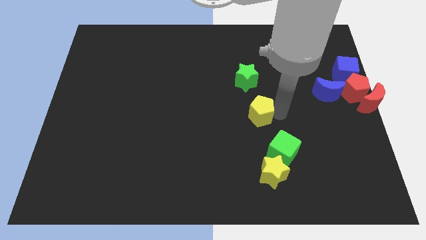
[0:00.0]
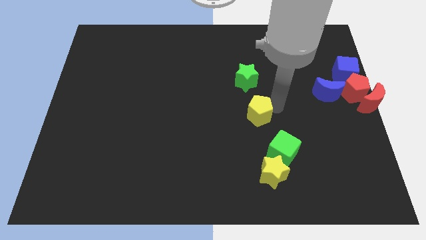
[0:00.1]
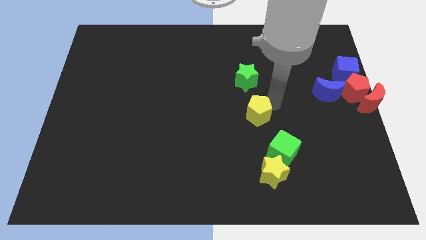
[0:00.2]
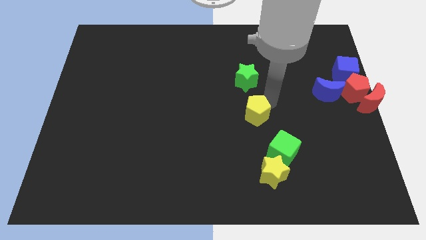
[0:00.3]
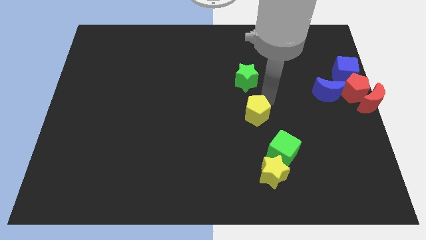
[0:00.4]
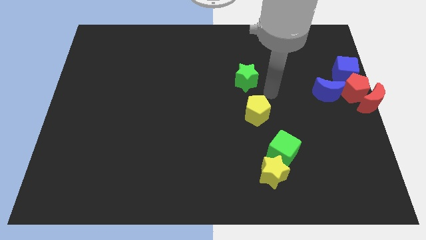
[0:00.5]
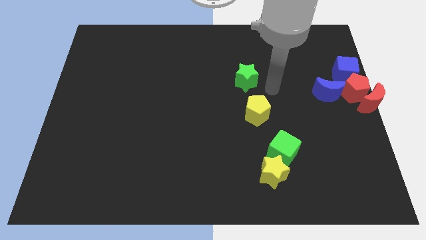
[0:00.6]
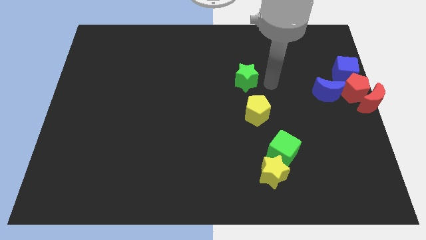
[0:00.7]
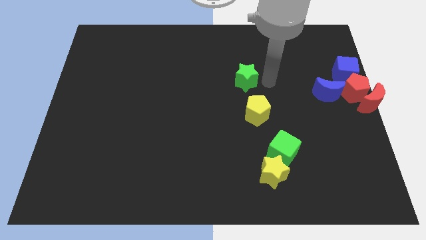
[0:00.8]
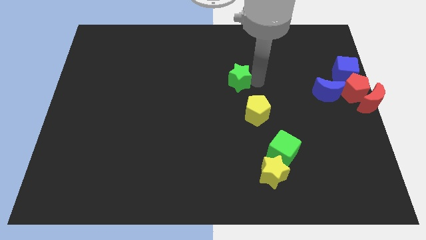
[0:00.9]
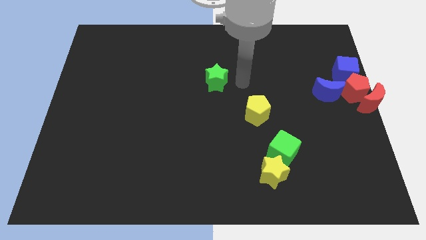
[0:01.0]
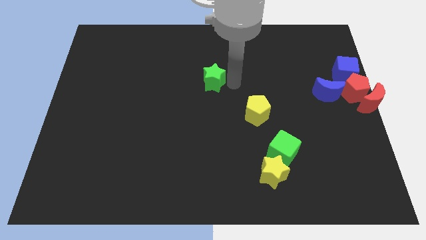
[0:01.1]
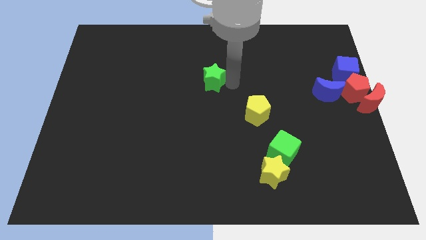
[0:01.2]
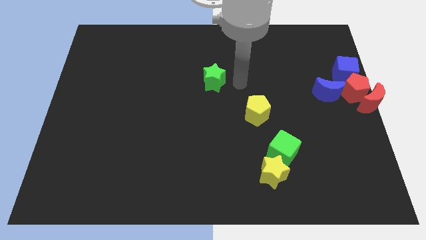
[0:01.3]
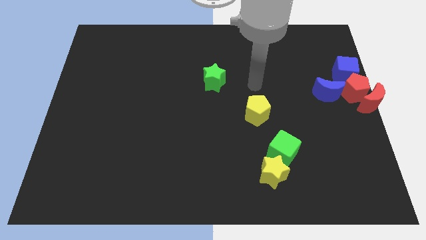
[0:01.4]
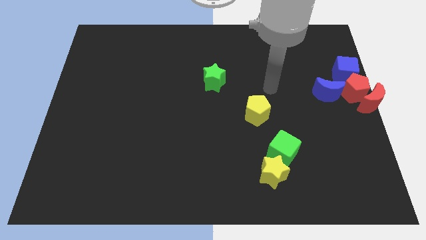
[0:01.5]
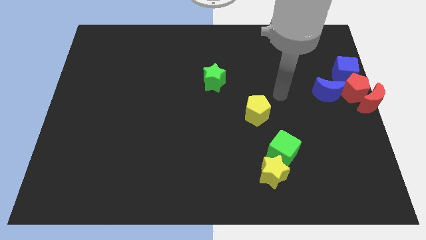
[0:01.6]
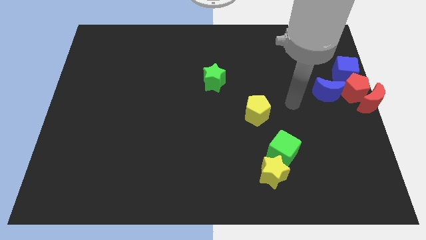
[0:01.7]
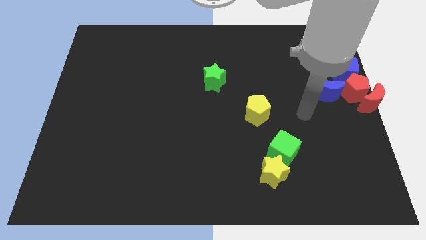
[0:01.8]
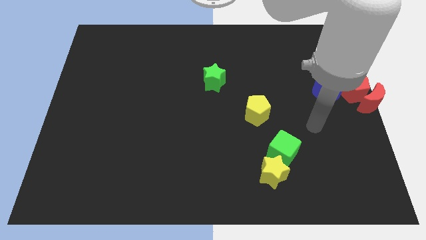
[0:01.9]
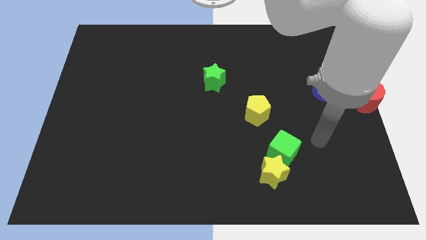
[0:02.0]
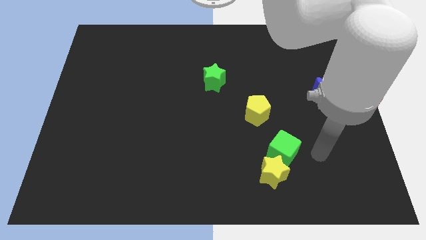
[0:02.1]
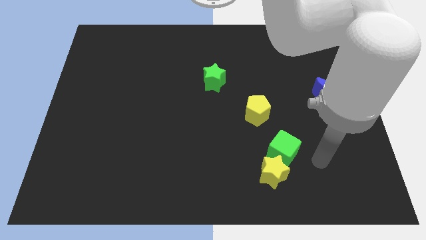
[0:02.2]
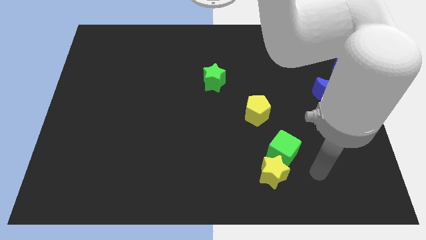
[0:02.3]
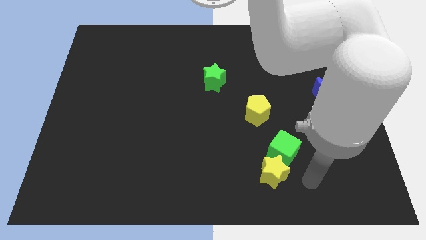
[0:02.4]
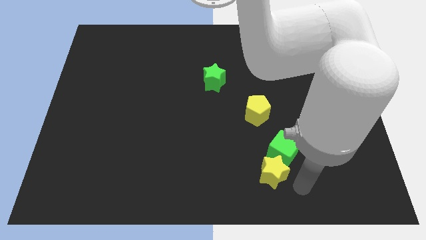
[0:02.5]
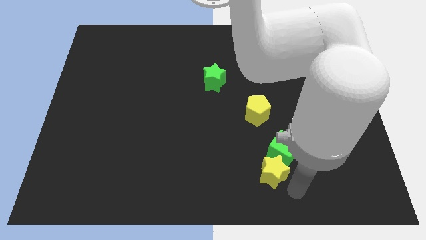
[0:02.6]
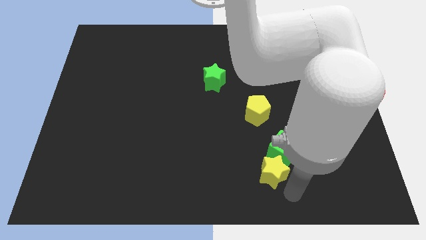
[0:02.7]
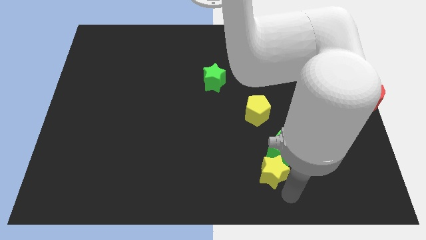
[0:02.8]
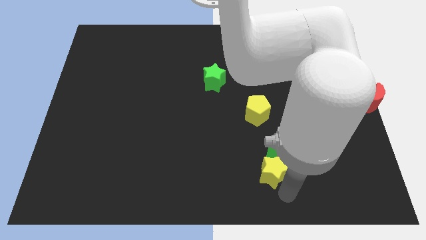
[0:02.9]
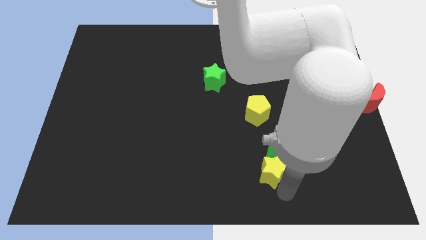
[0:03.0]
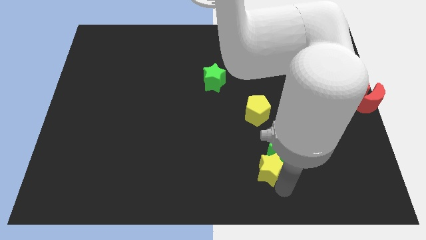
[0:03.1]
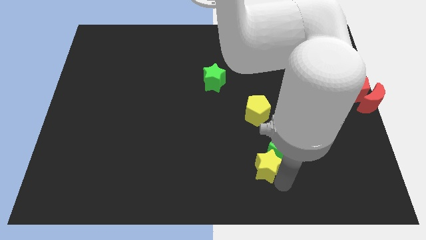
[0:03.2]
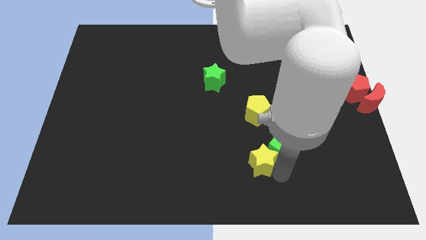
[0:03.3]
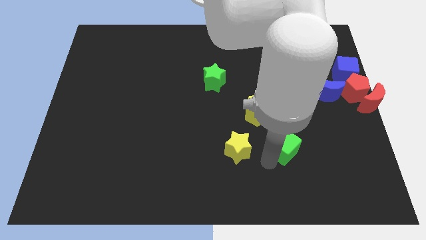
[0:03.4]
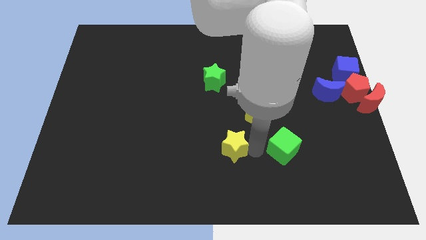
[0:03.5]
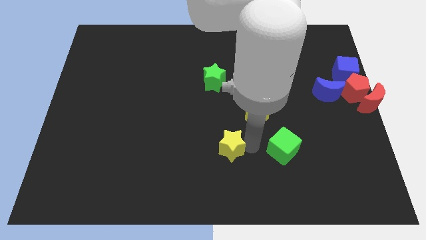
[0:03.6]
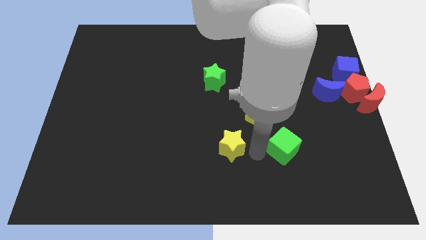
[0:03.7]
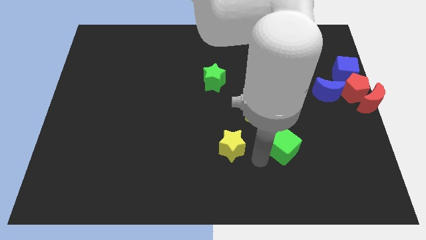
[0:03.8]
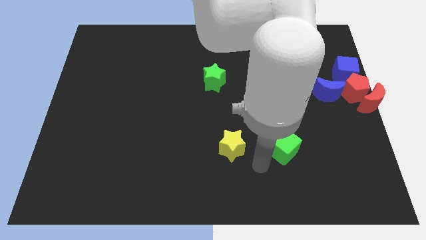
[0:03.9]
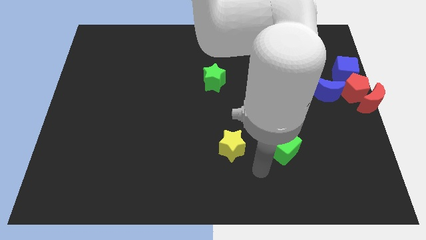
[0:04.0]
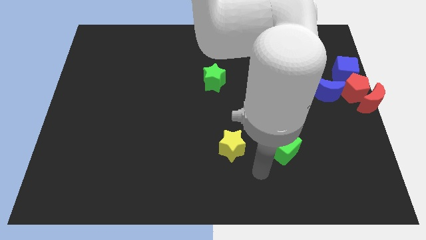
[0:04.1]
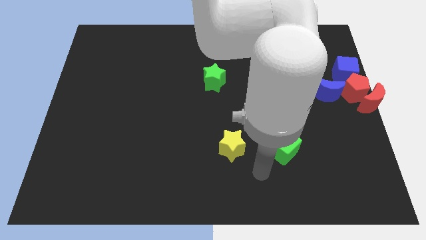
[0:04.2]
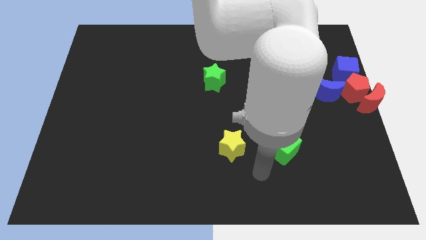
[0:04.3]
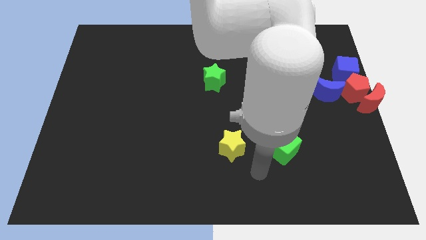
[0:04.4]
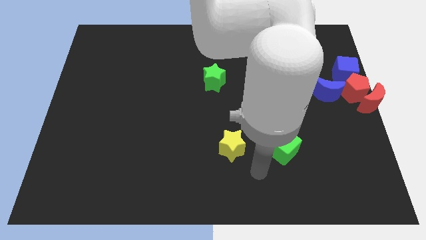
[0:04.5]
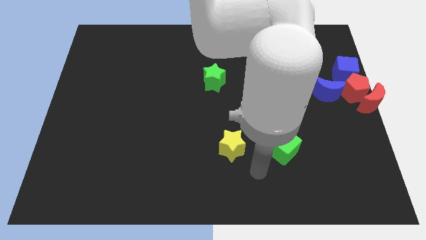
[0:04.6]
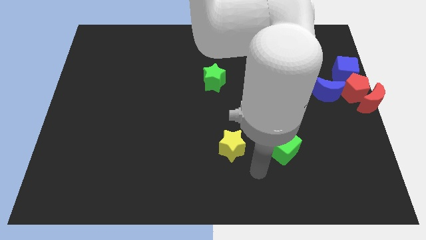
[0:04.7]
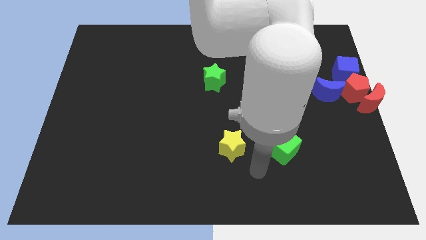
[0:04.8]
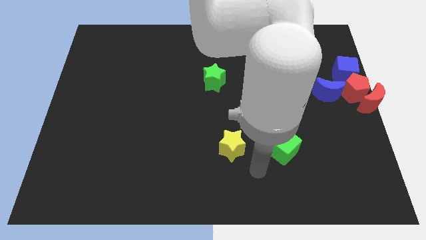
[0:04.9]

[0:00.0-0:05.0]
separate yellow star from green cube

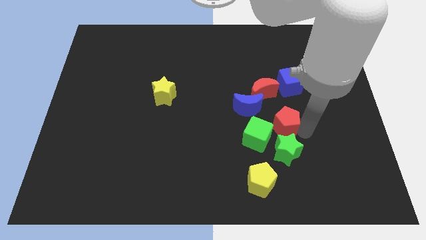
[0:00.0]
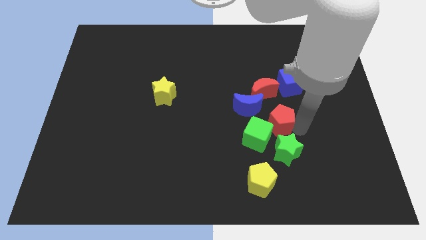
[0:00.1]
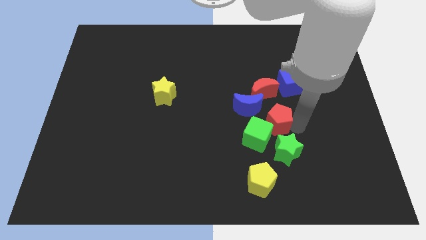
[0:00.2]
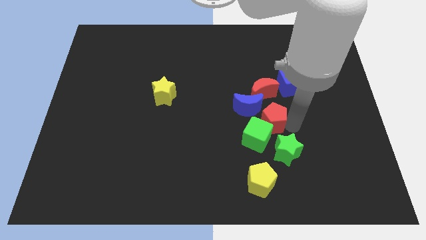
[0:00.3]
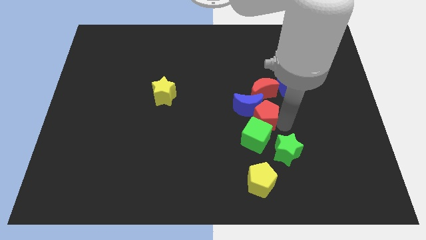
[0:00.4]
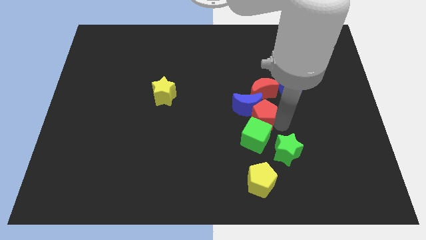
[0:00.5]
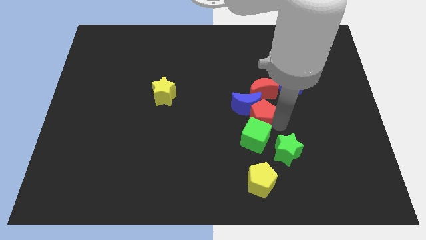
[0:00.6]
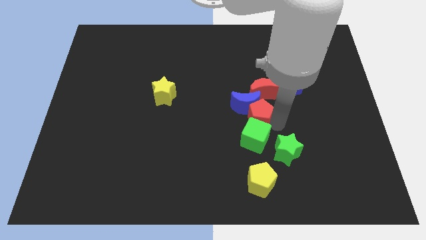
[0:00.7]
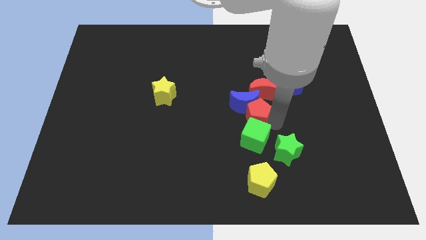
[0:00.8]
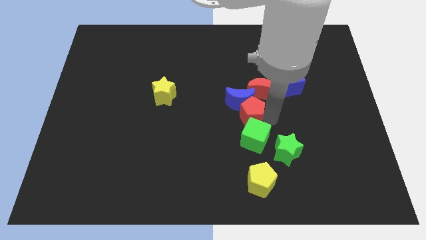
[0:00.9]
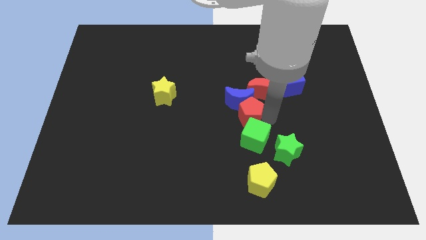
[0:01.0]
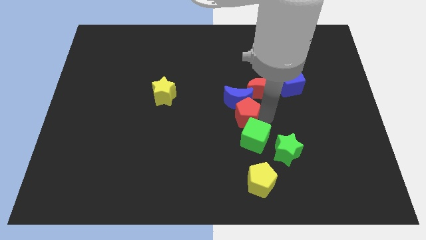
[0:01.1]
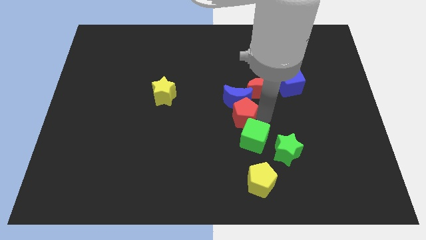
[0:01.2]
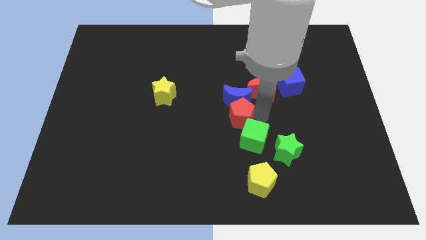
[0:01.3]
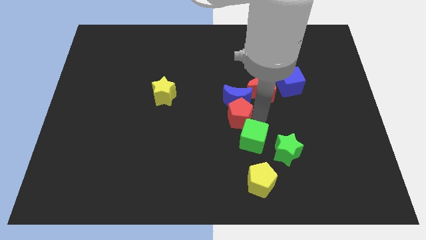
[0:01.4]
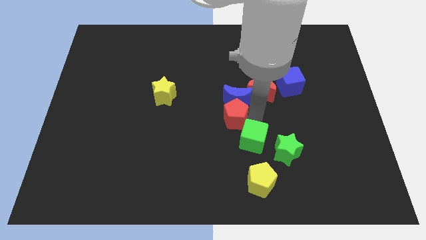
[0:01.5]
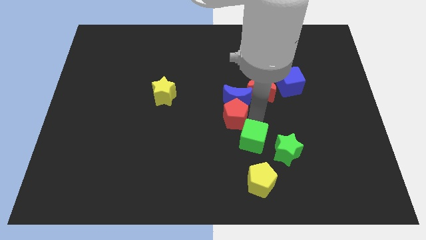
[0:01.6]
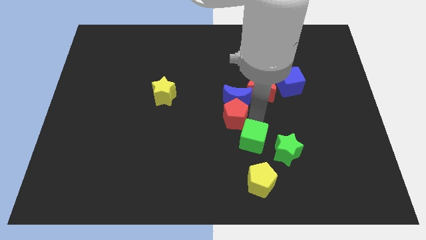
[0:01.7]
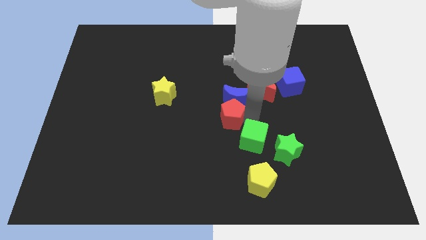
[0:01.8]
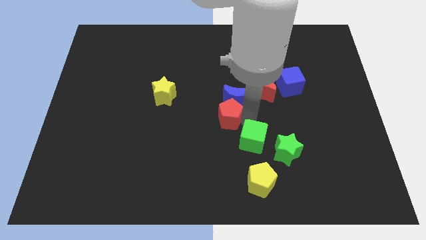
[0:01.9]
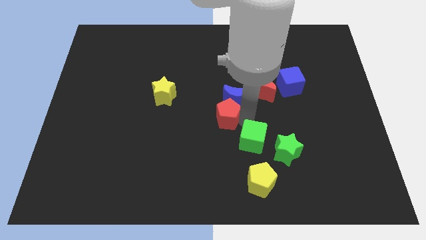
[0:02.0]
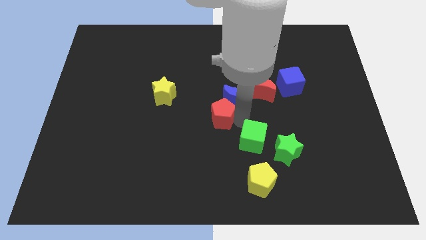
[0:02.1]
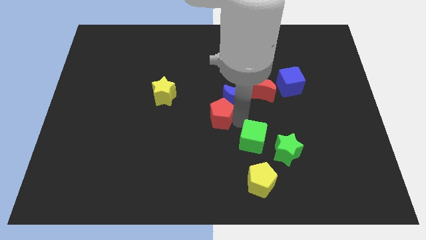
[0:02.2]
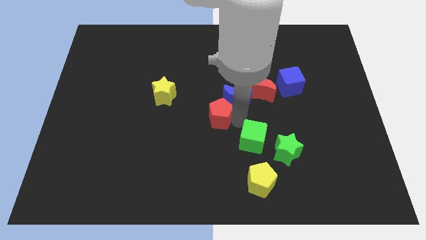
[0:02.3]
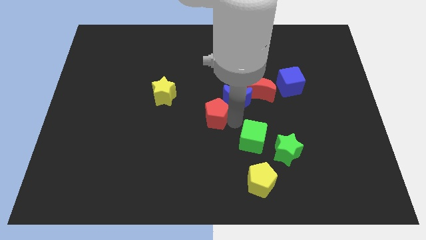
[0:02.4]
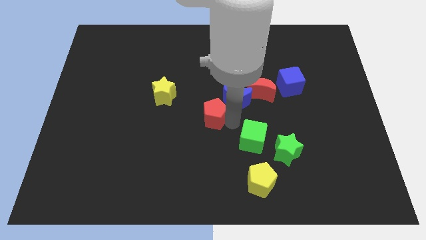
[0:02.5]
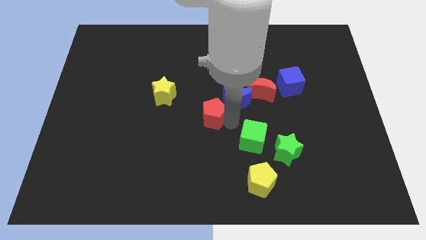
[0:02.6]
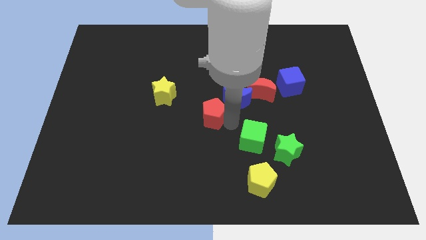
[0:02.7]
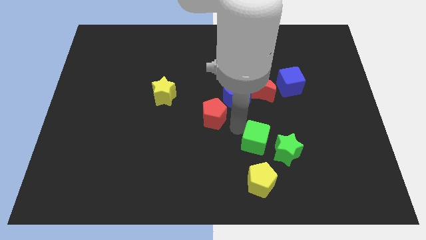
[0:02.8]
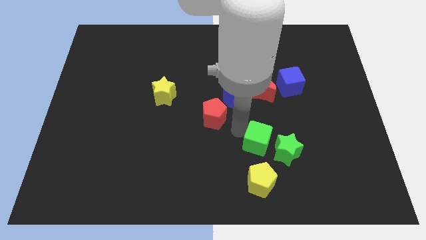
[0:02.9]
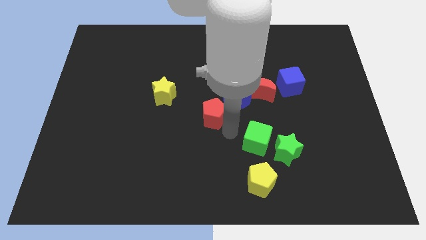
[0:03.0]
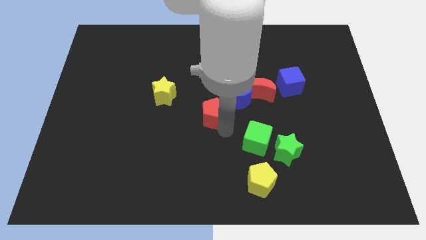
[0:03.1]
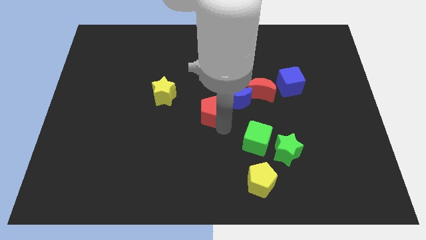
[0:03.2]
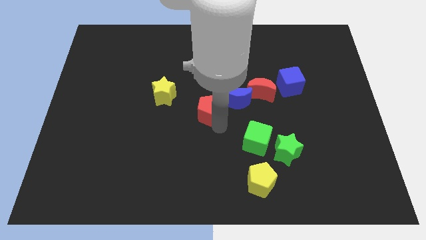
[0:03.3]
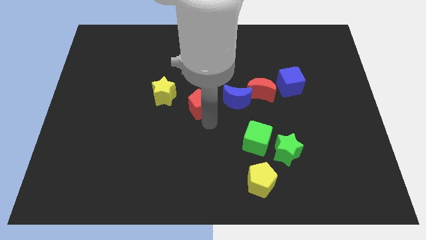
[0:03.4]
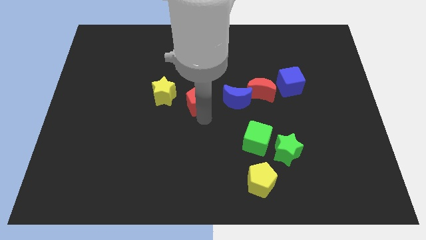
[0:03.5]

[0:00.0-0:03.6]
move red pentagon towards yellow star

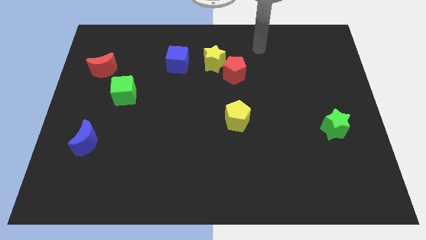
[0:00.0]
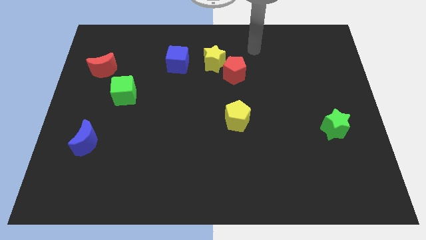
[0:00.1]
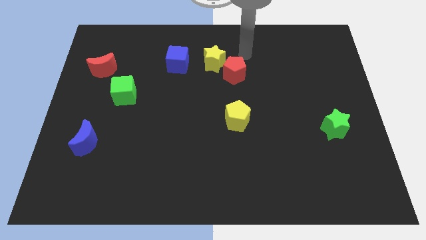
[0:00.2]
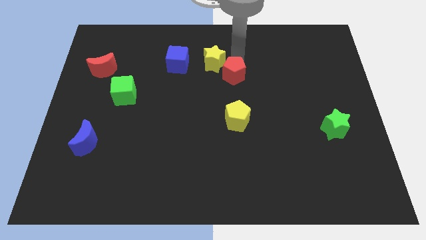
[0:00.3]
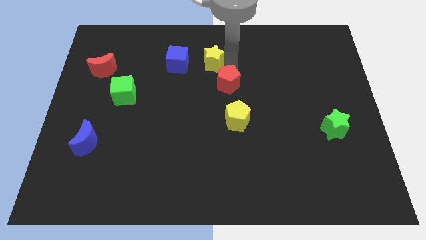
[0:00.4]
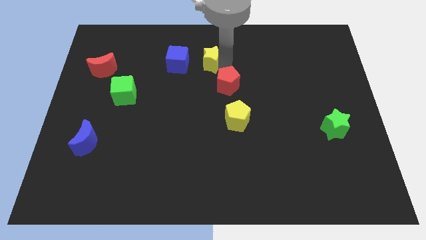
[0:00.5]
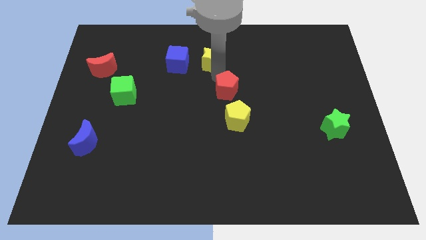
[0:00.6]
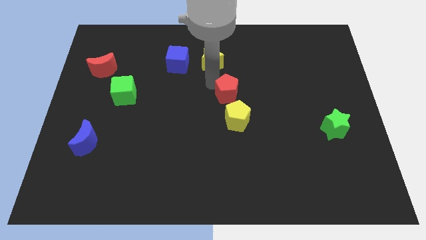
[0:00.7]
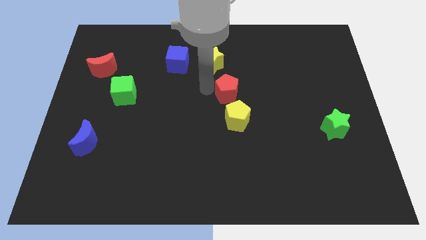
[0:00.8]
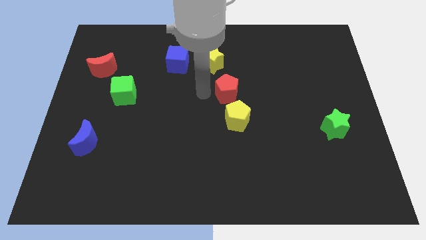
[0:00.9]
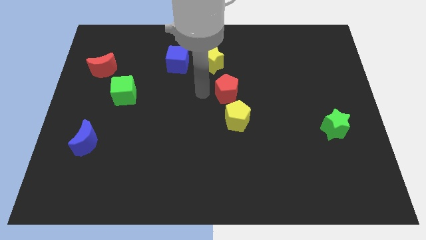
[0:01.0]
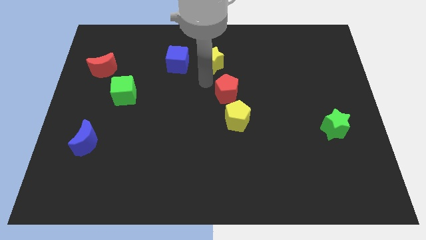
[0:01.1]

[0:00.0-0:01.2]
move the red pentagon slightly to the top of the yellow pentagon
